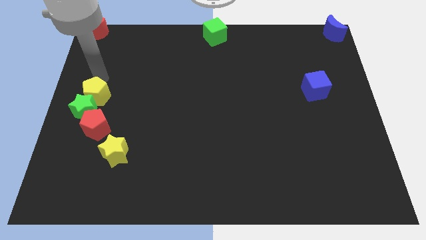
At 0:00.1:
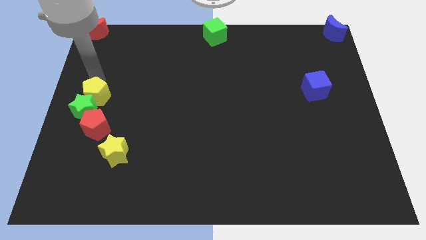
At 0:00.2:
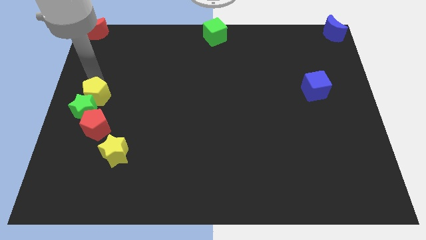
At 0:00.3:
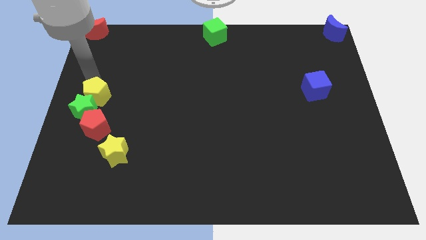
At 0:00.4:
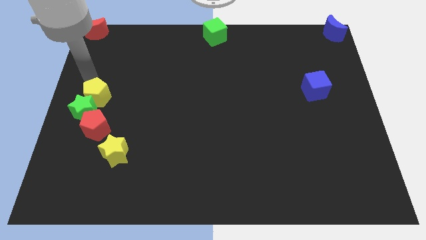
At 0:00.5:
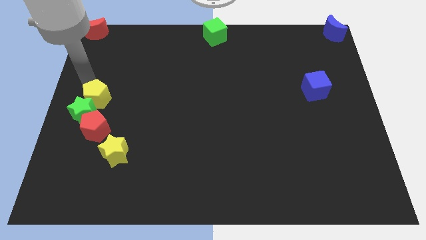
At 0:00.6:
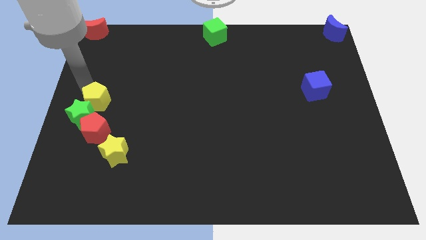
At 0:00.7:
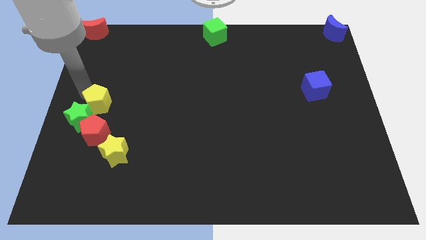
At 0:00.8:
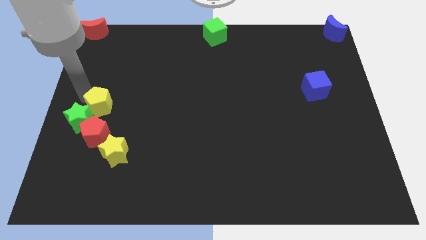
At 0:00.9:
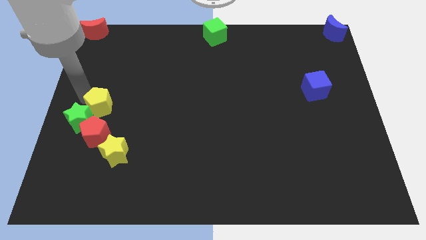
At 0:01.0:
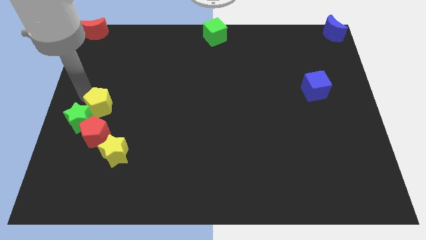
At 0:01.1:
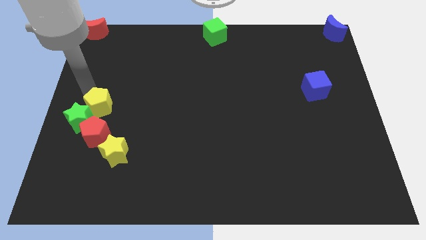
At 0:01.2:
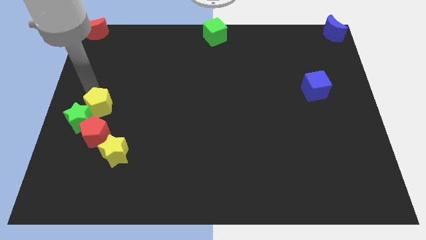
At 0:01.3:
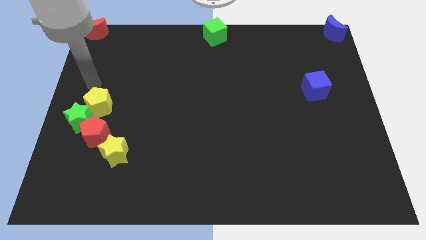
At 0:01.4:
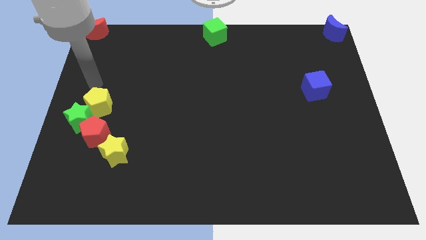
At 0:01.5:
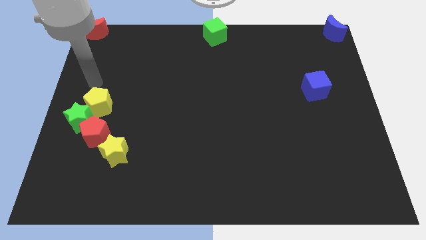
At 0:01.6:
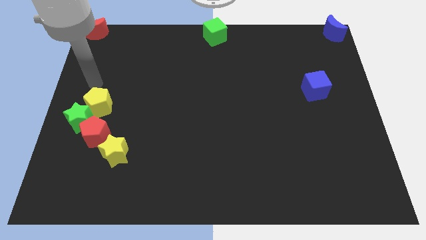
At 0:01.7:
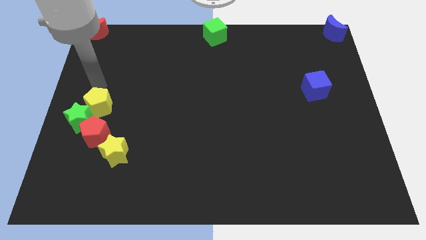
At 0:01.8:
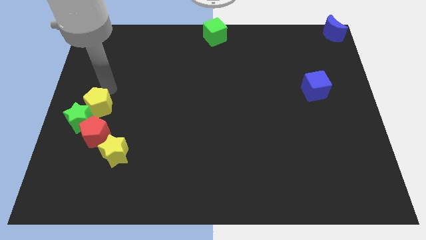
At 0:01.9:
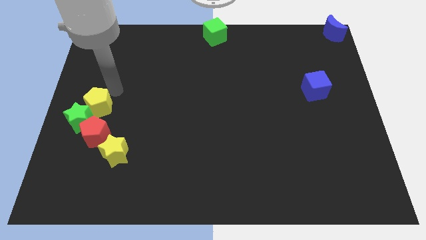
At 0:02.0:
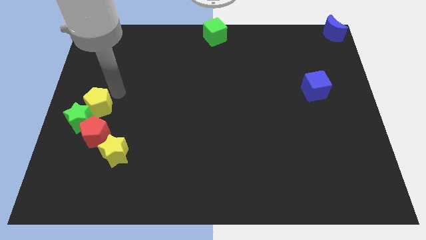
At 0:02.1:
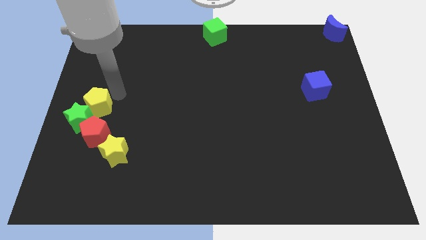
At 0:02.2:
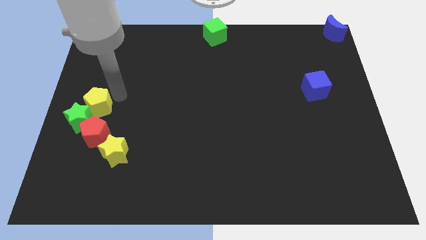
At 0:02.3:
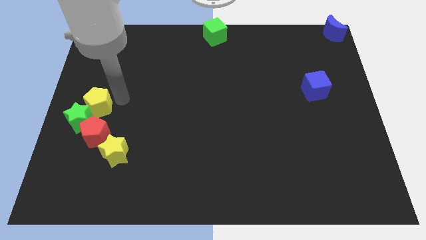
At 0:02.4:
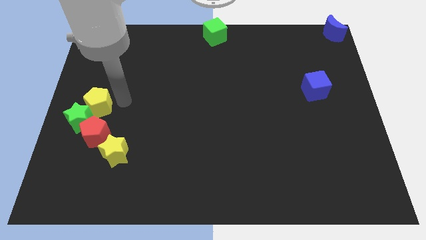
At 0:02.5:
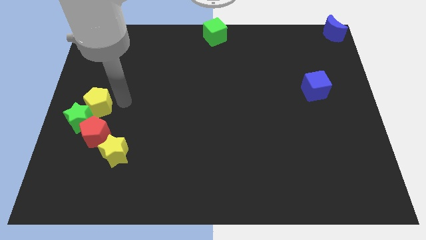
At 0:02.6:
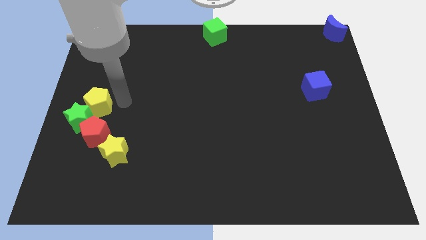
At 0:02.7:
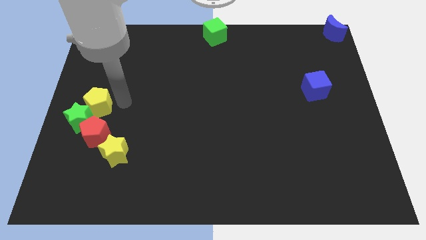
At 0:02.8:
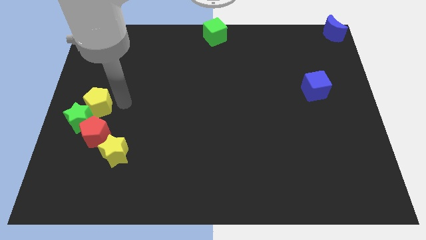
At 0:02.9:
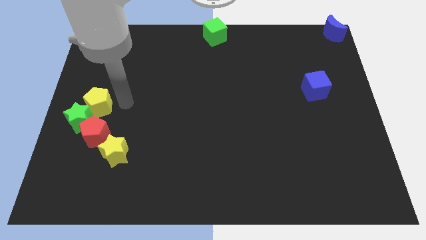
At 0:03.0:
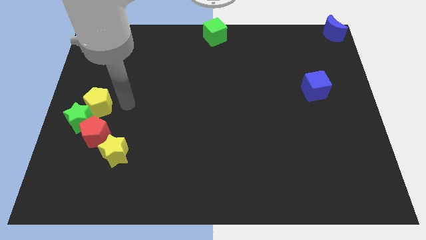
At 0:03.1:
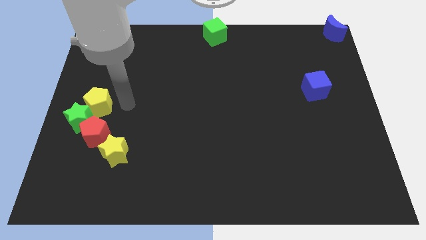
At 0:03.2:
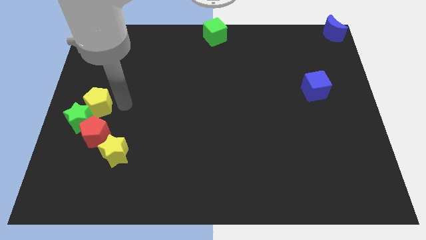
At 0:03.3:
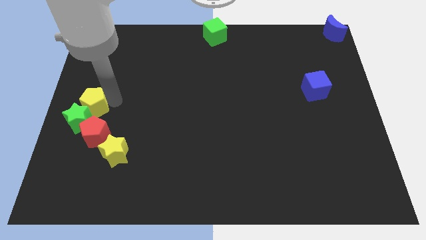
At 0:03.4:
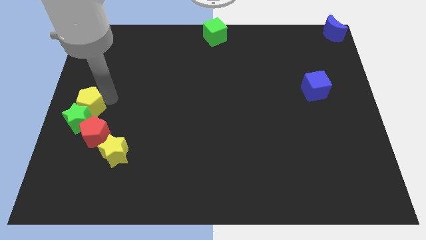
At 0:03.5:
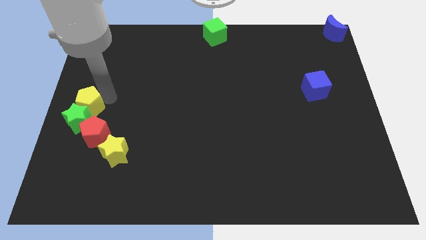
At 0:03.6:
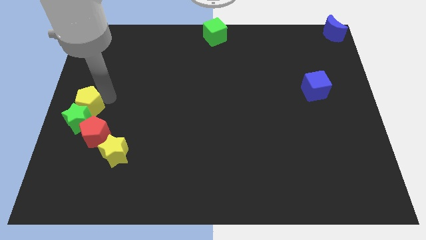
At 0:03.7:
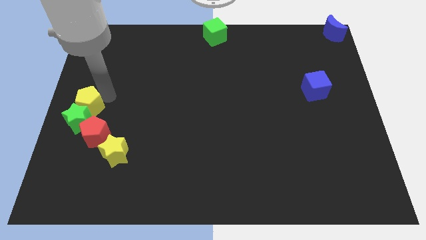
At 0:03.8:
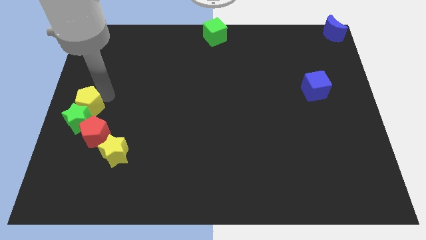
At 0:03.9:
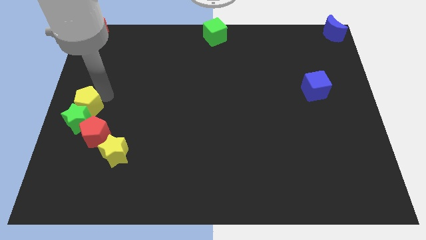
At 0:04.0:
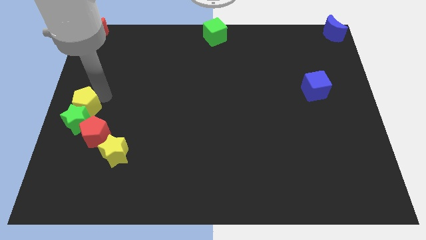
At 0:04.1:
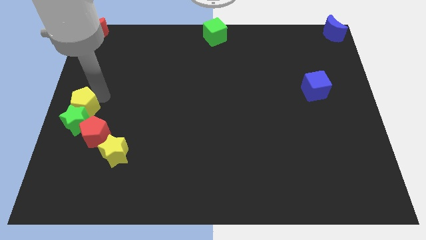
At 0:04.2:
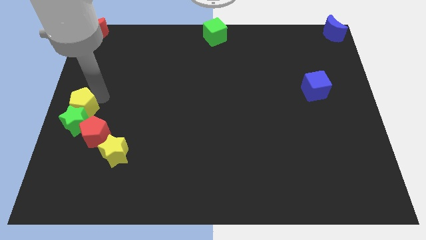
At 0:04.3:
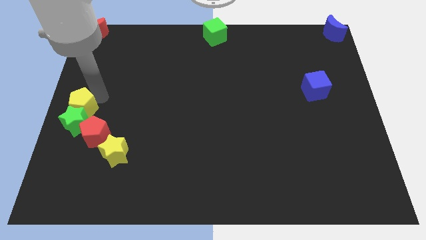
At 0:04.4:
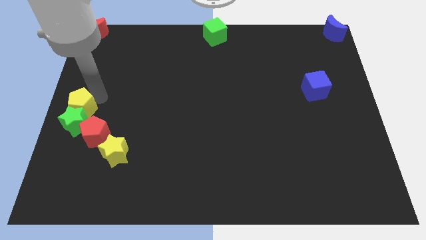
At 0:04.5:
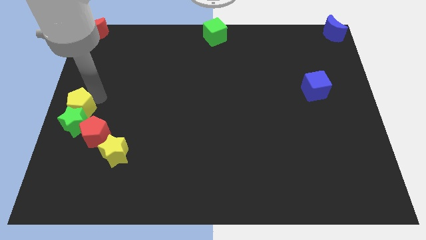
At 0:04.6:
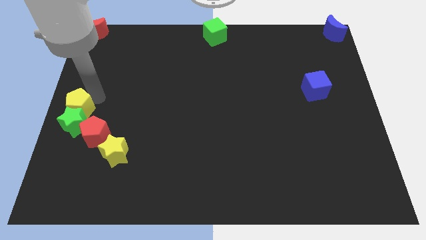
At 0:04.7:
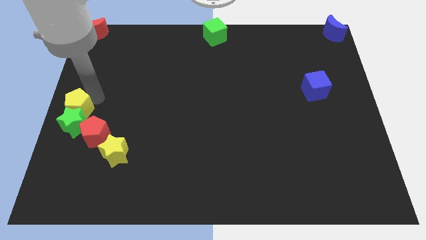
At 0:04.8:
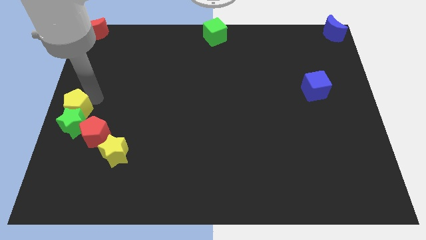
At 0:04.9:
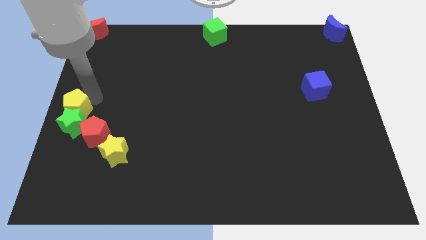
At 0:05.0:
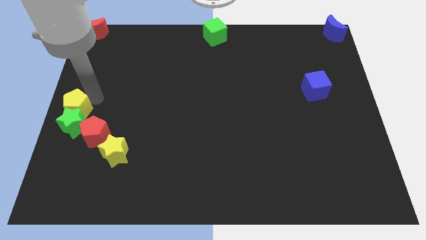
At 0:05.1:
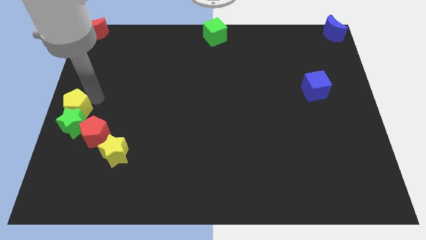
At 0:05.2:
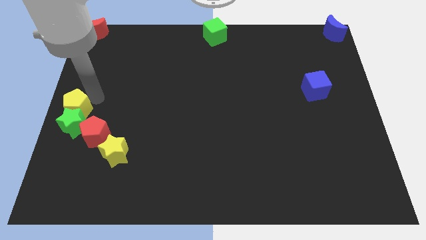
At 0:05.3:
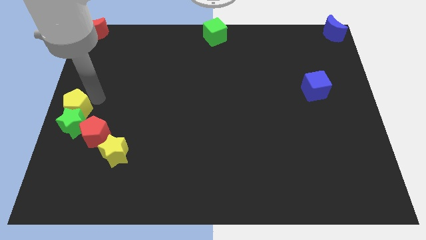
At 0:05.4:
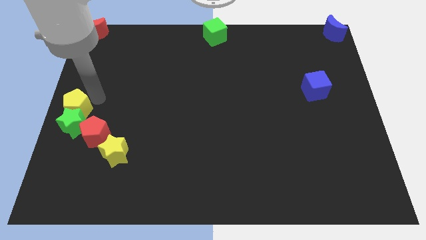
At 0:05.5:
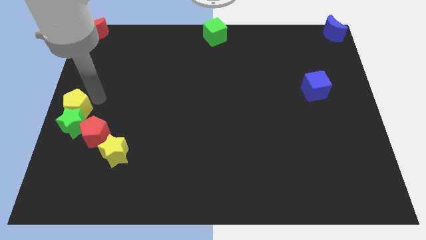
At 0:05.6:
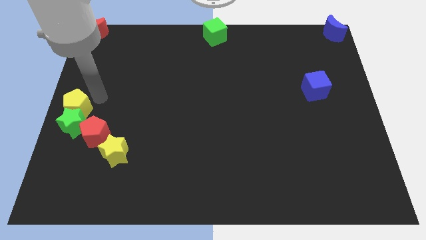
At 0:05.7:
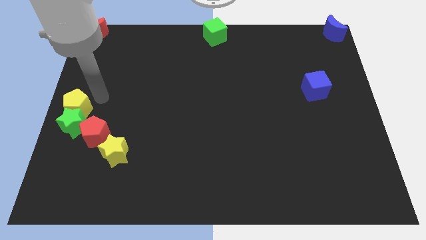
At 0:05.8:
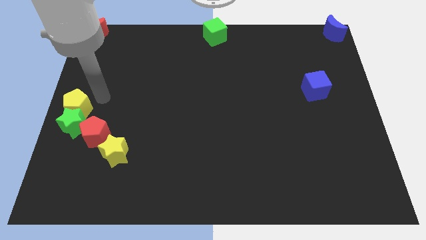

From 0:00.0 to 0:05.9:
slightly push the yellow pentagon towards the center left of the board

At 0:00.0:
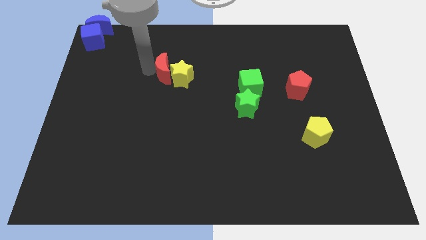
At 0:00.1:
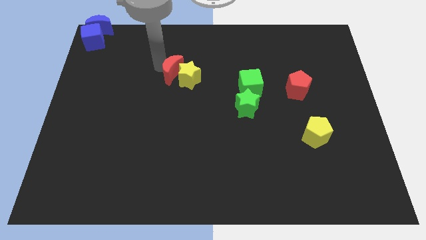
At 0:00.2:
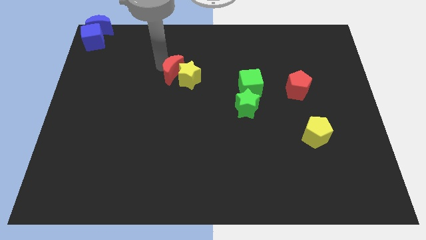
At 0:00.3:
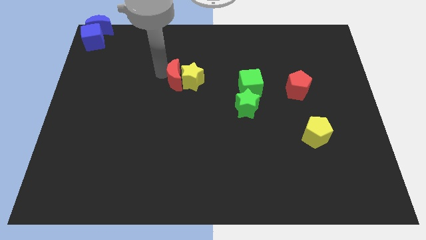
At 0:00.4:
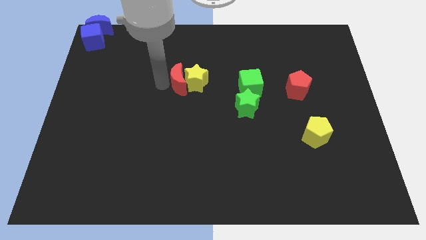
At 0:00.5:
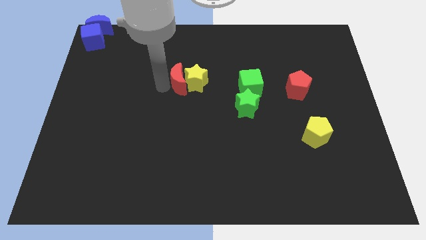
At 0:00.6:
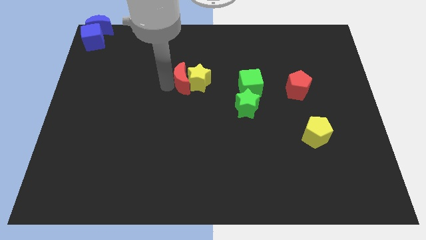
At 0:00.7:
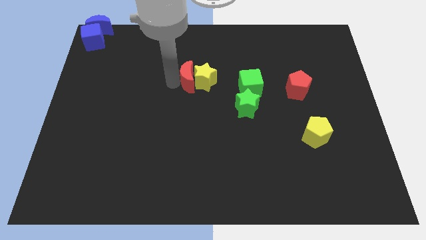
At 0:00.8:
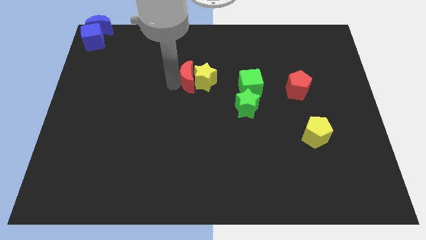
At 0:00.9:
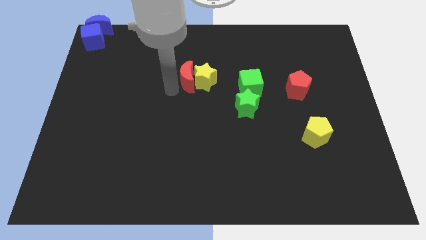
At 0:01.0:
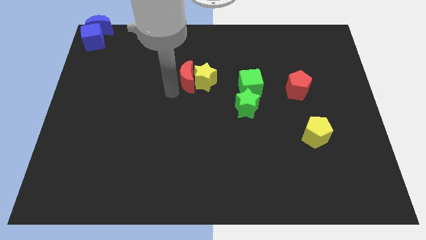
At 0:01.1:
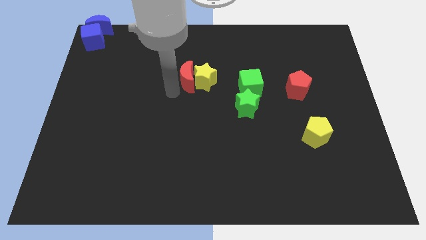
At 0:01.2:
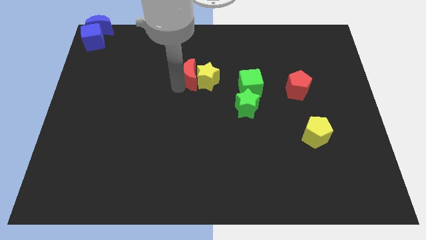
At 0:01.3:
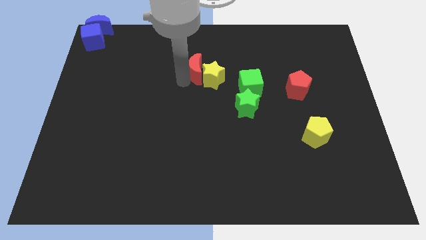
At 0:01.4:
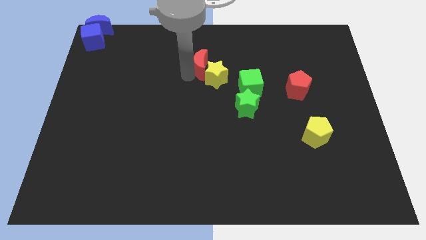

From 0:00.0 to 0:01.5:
push the red crescent along with the yellow star slightly to the right

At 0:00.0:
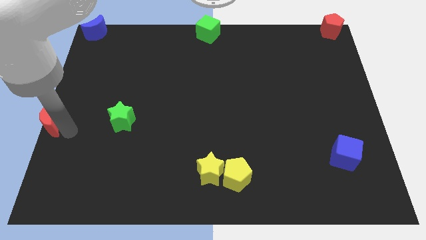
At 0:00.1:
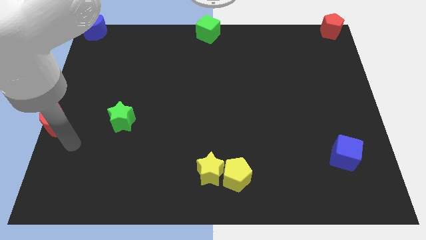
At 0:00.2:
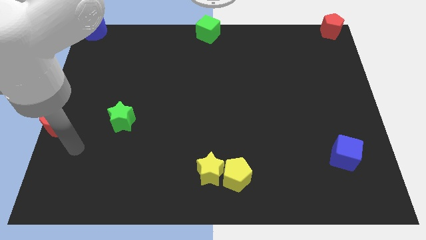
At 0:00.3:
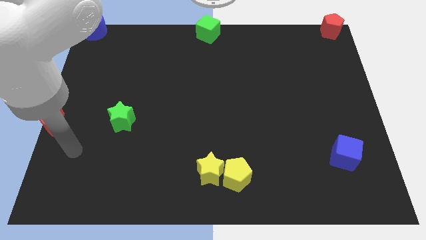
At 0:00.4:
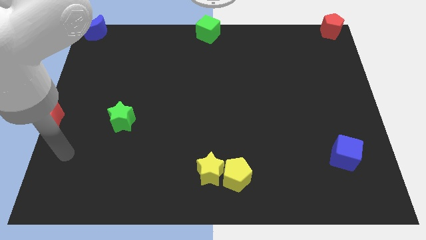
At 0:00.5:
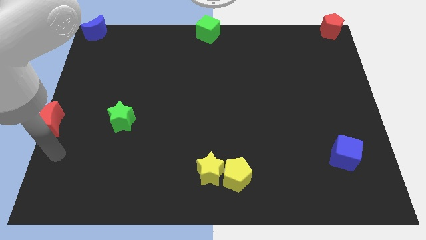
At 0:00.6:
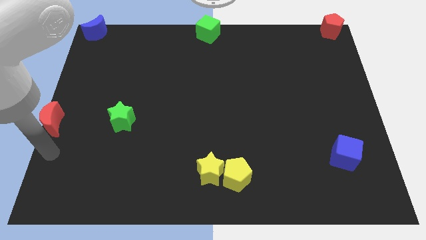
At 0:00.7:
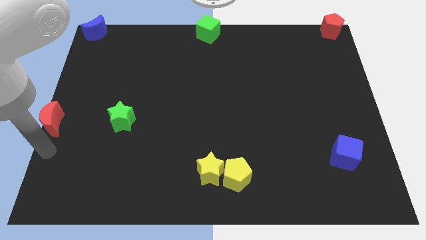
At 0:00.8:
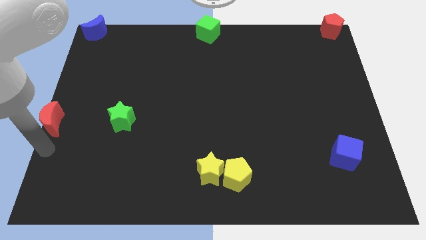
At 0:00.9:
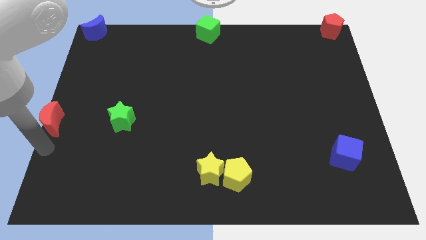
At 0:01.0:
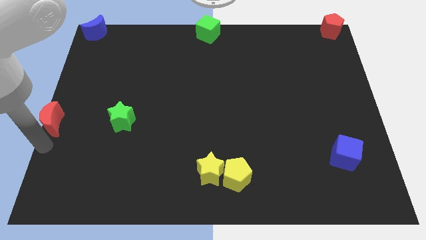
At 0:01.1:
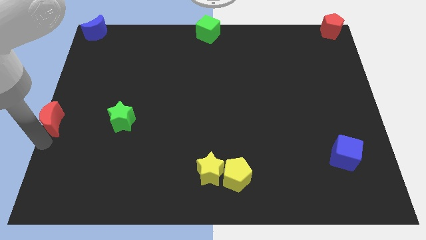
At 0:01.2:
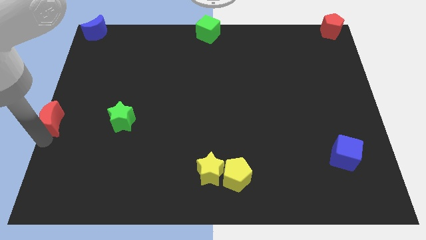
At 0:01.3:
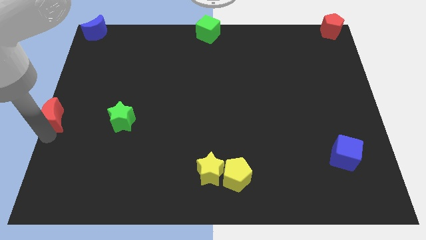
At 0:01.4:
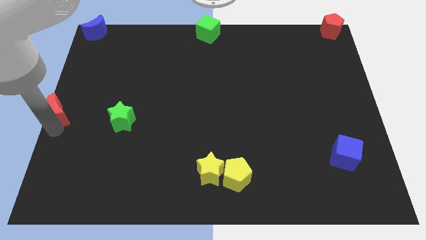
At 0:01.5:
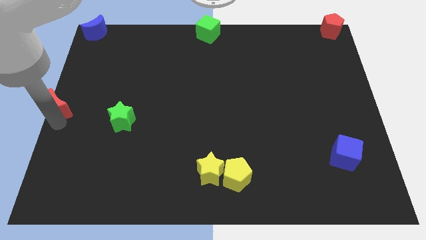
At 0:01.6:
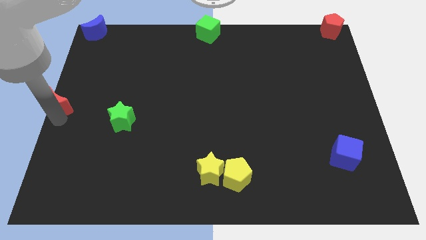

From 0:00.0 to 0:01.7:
move the red moon to the left middle
